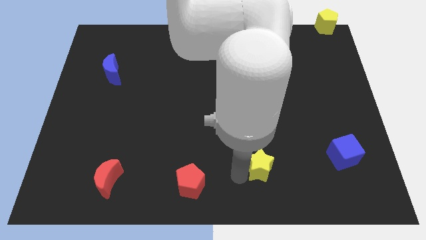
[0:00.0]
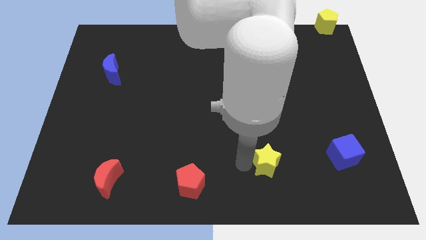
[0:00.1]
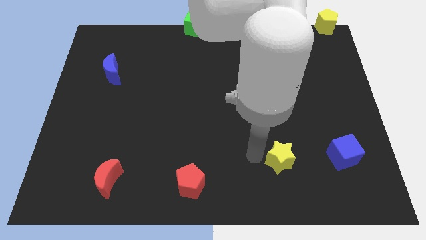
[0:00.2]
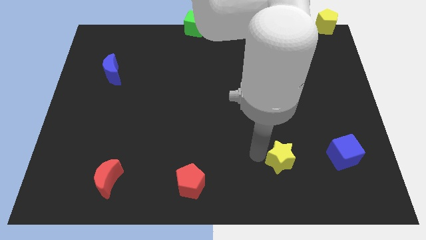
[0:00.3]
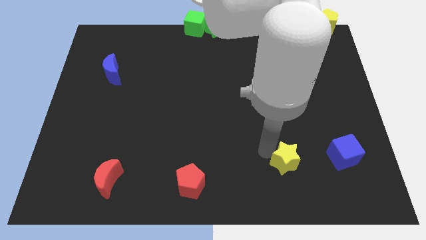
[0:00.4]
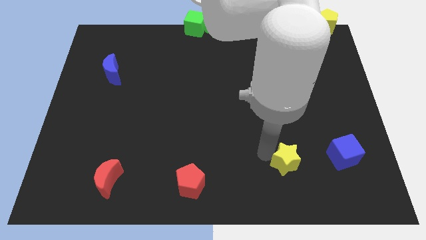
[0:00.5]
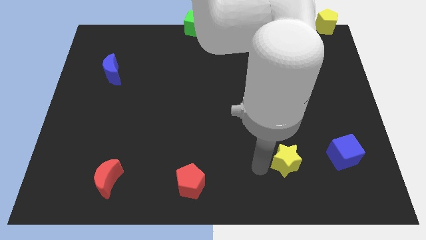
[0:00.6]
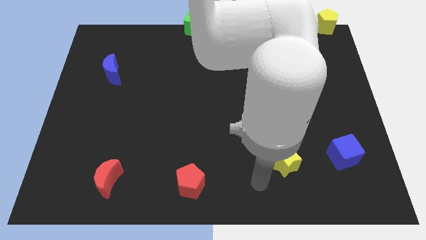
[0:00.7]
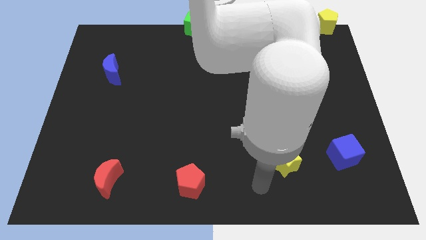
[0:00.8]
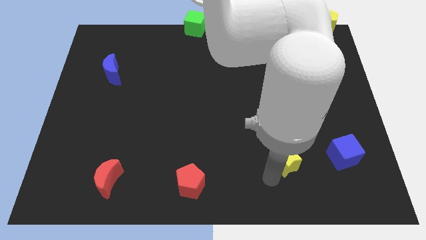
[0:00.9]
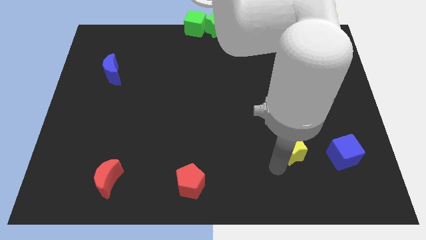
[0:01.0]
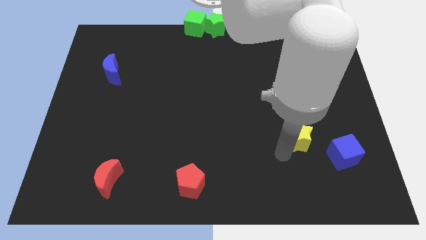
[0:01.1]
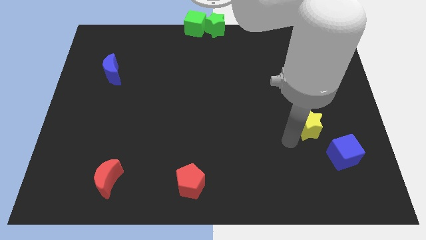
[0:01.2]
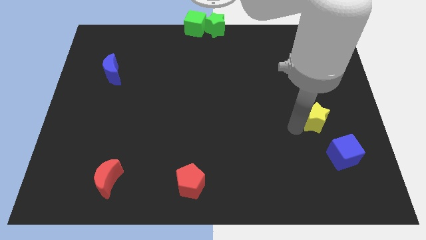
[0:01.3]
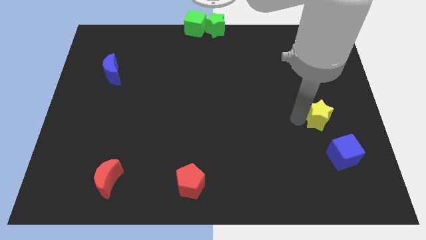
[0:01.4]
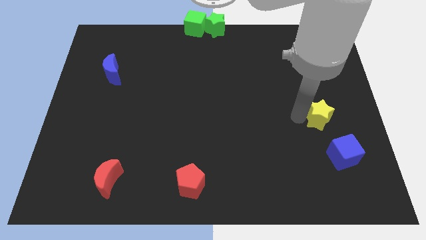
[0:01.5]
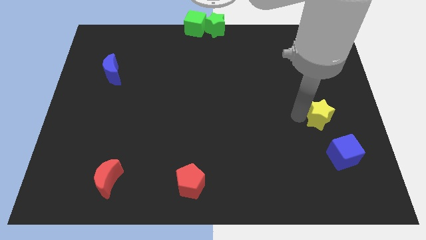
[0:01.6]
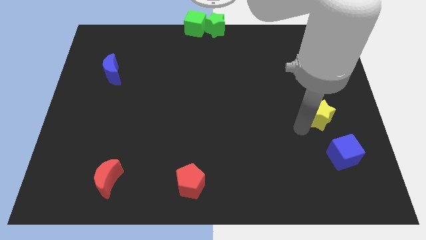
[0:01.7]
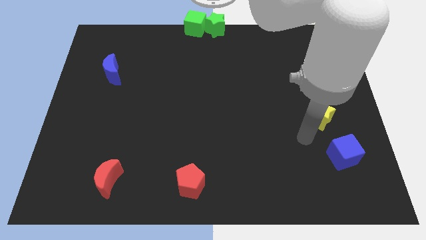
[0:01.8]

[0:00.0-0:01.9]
drag the yellow star to the top side of the blue cube

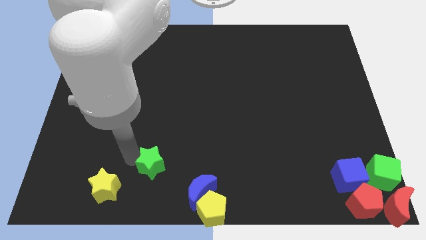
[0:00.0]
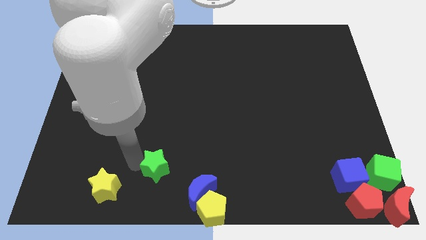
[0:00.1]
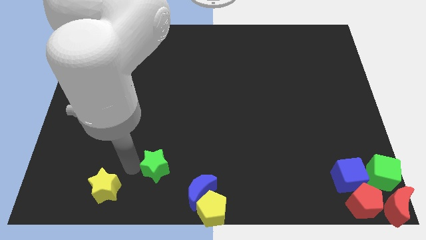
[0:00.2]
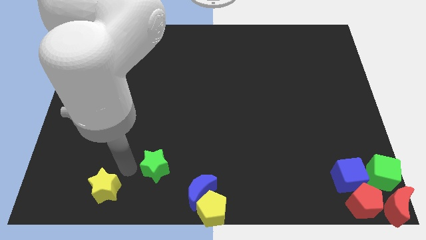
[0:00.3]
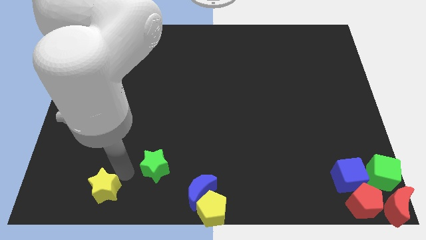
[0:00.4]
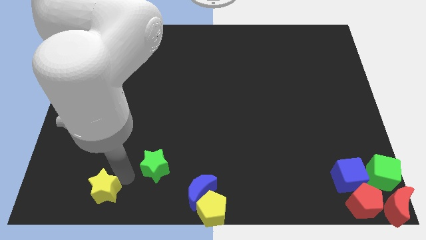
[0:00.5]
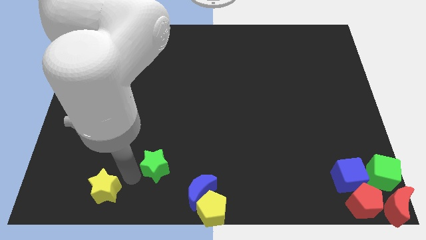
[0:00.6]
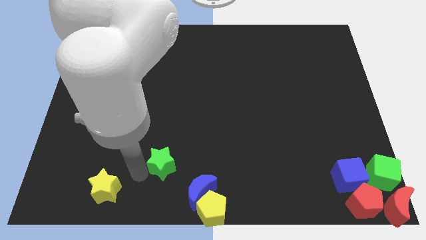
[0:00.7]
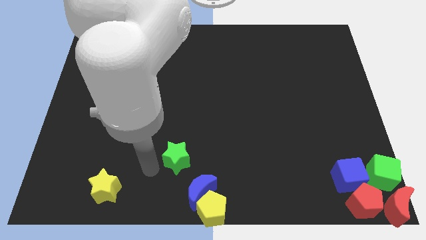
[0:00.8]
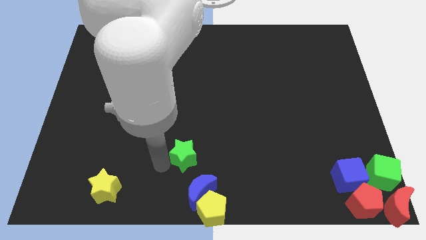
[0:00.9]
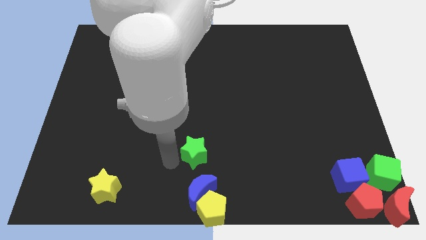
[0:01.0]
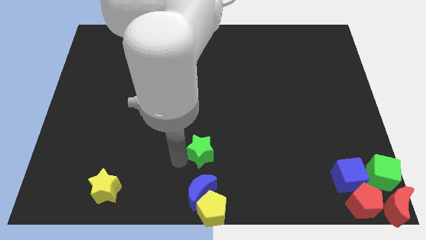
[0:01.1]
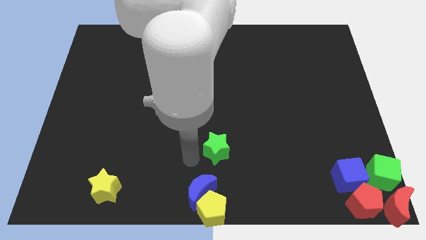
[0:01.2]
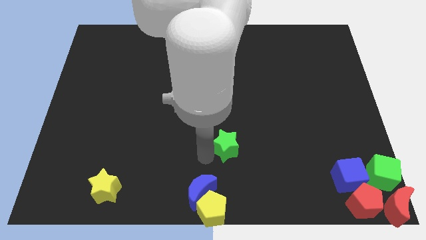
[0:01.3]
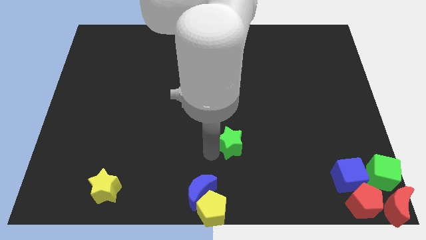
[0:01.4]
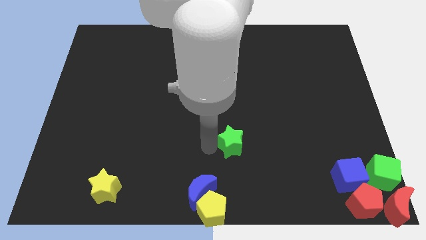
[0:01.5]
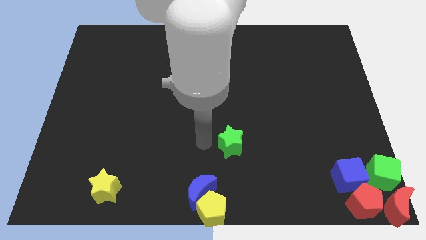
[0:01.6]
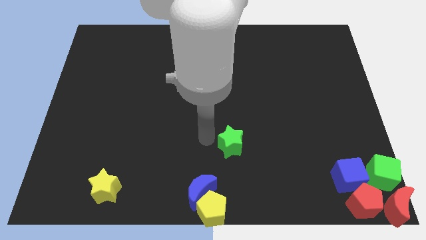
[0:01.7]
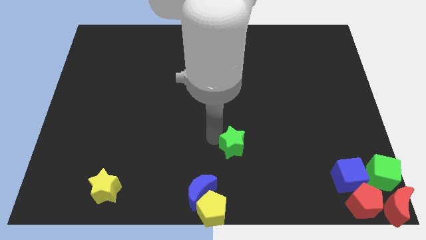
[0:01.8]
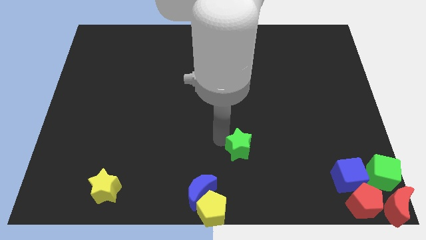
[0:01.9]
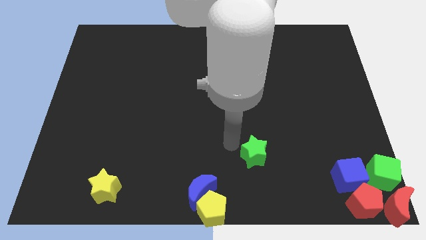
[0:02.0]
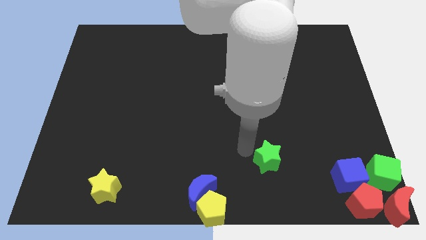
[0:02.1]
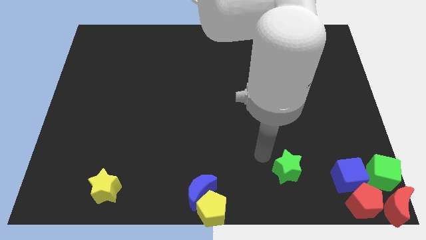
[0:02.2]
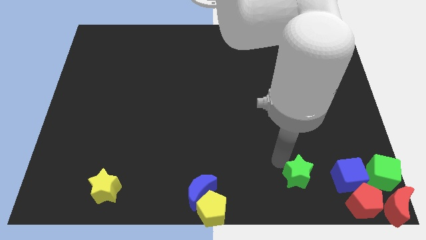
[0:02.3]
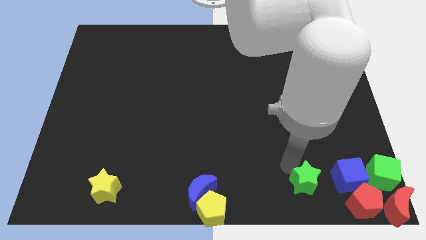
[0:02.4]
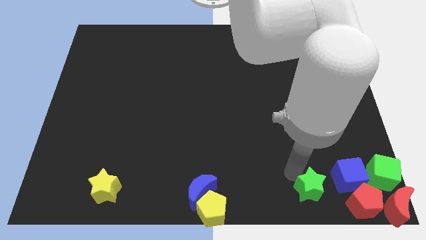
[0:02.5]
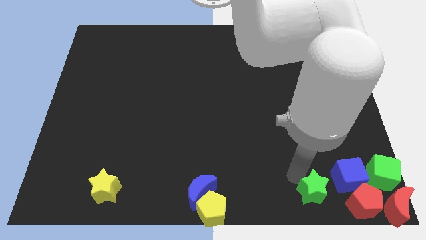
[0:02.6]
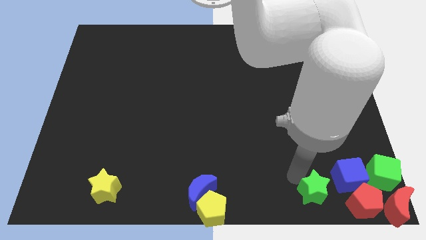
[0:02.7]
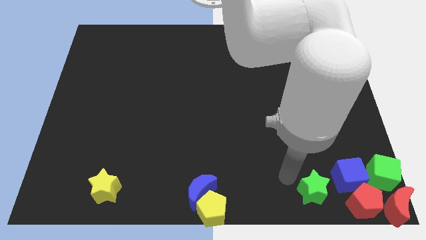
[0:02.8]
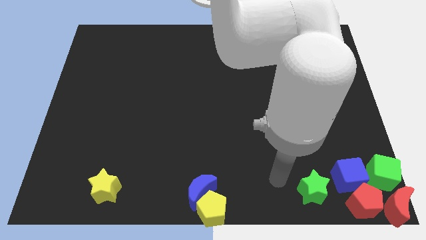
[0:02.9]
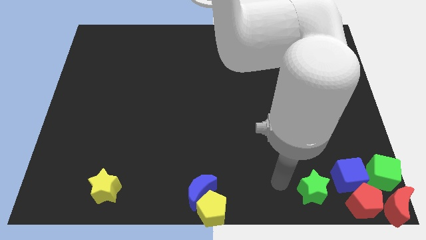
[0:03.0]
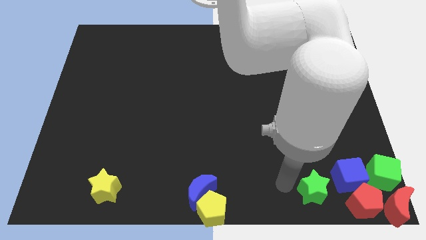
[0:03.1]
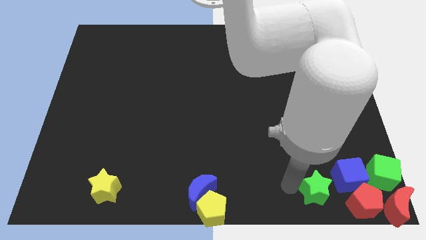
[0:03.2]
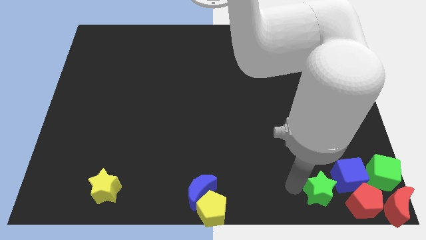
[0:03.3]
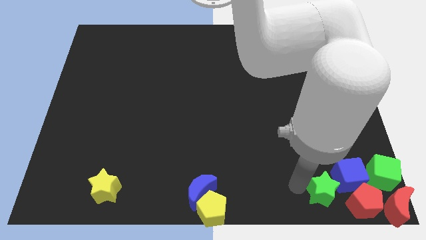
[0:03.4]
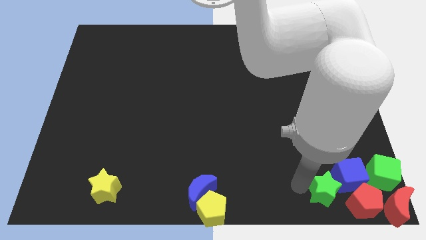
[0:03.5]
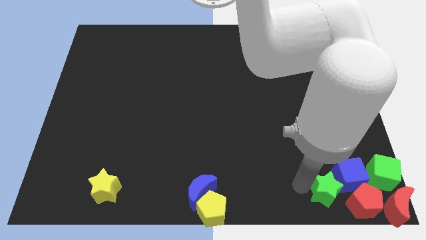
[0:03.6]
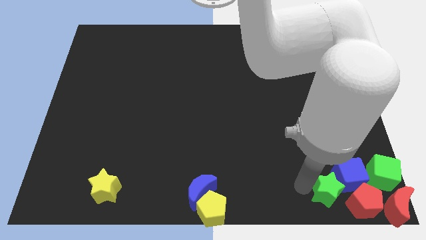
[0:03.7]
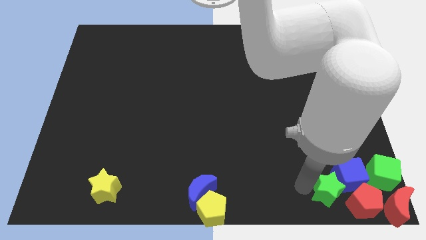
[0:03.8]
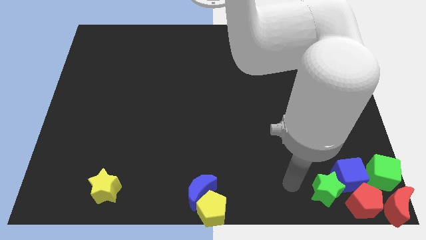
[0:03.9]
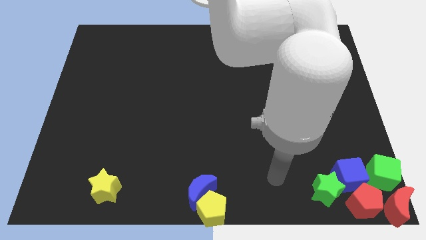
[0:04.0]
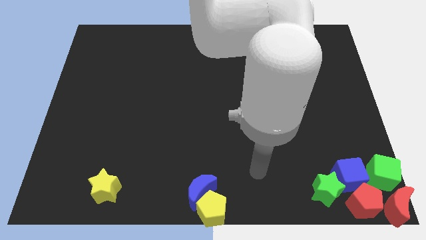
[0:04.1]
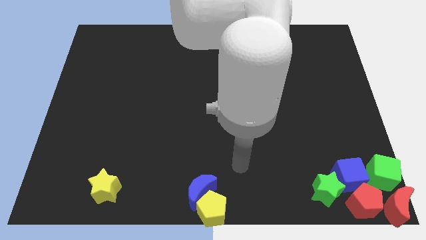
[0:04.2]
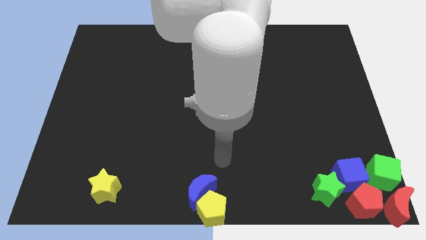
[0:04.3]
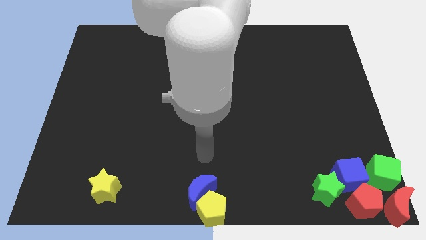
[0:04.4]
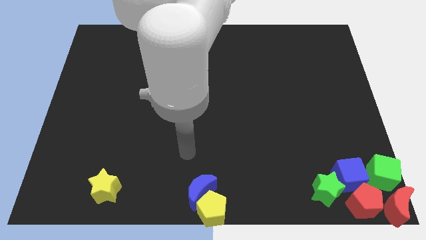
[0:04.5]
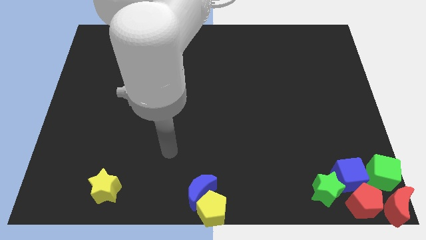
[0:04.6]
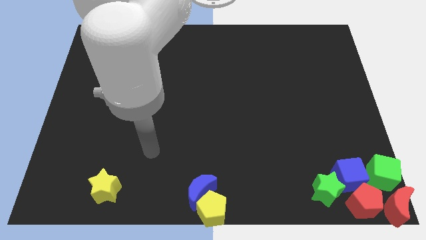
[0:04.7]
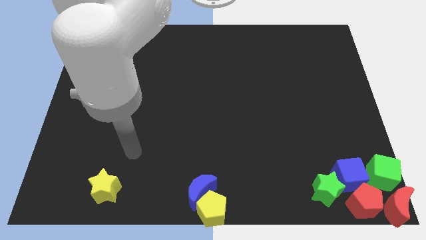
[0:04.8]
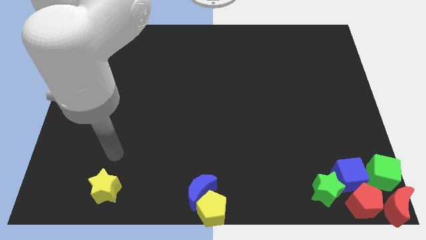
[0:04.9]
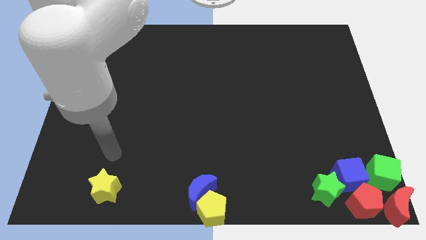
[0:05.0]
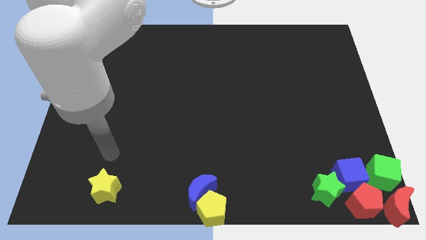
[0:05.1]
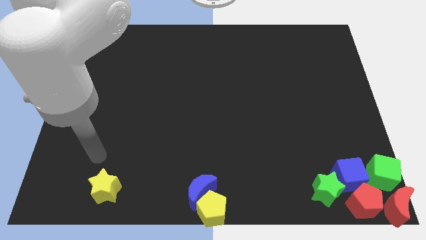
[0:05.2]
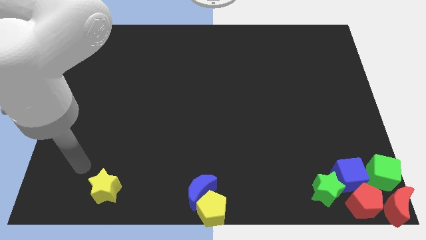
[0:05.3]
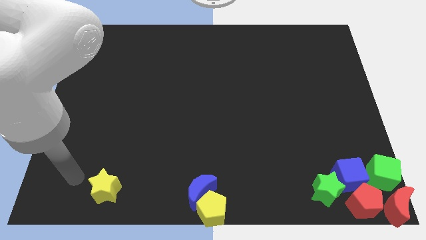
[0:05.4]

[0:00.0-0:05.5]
push the green star to the right side of the board

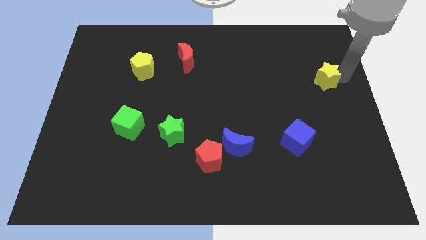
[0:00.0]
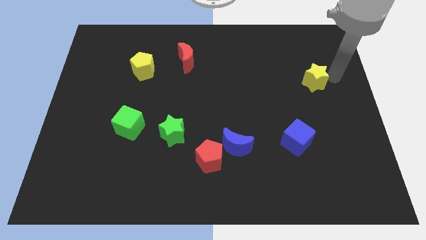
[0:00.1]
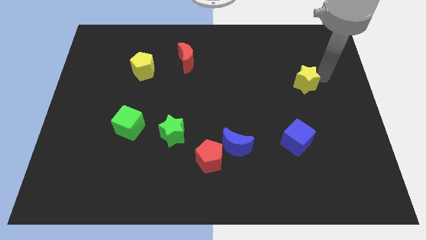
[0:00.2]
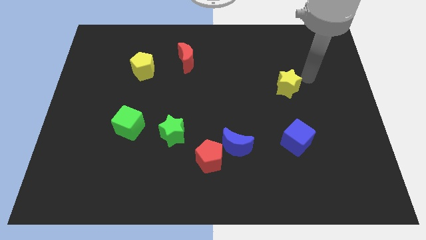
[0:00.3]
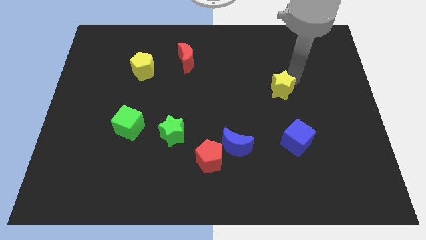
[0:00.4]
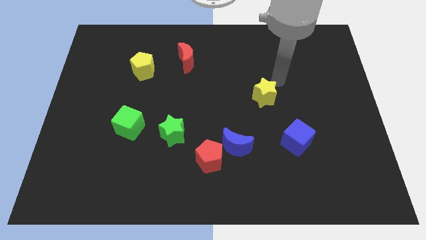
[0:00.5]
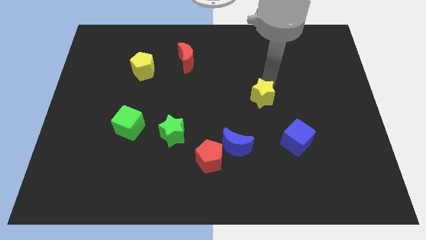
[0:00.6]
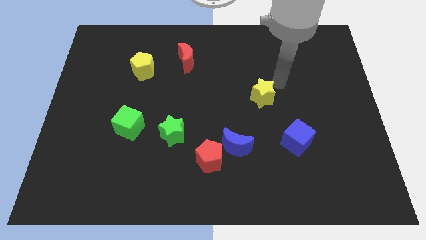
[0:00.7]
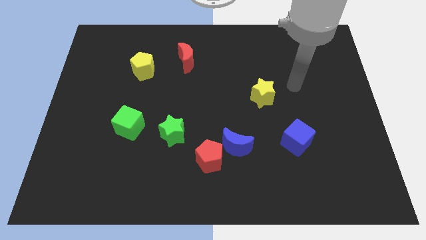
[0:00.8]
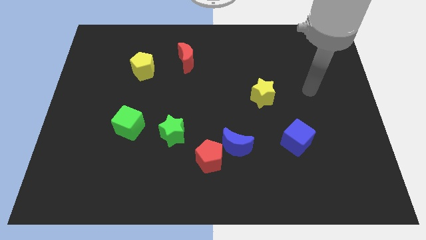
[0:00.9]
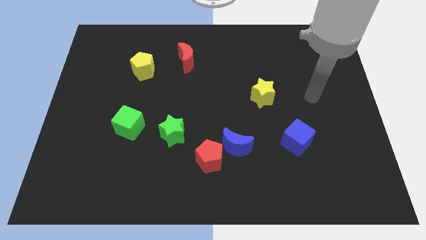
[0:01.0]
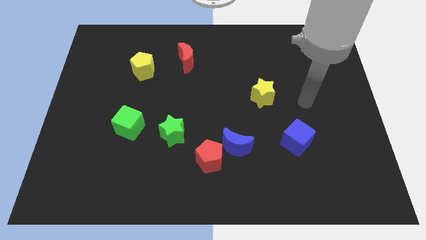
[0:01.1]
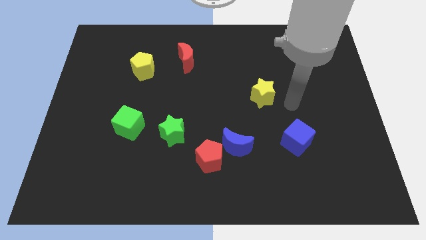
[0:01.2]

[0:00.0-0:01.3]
push the yellow star to the center to form a triangle with a blue cube and blue crescent

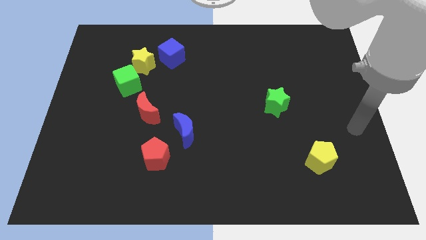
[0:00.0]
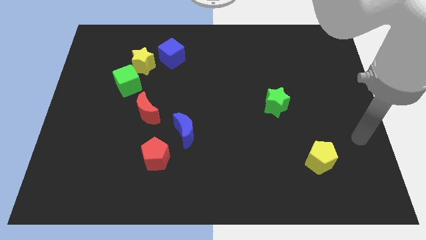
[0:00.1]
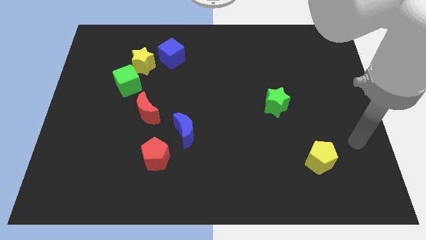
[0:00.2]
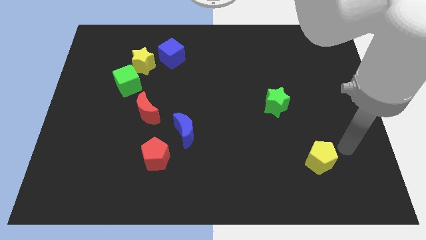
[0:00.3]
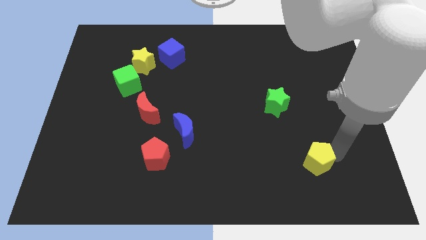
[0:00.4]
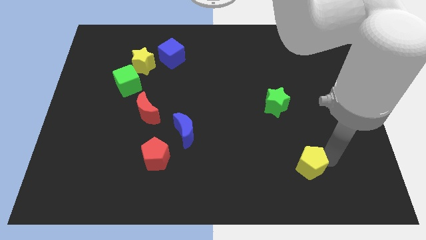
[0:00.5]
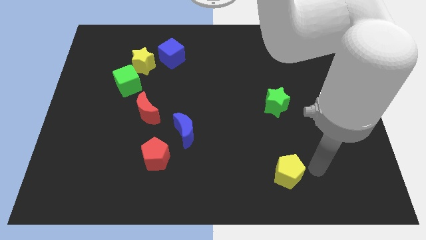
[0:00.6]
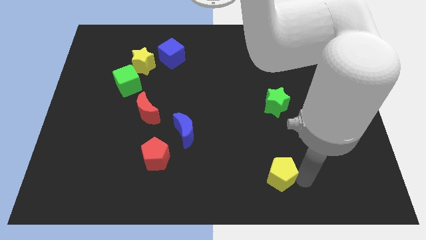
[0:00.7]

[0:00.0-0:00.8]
put the yellow pentagon at the bottom side of the green star
